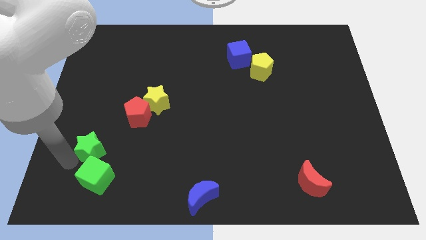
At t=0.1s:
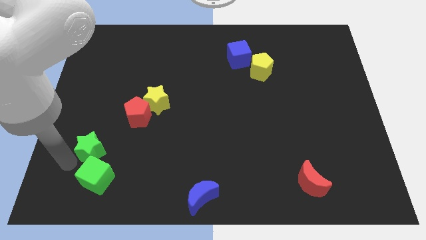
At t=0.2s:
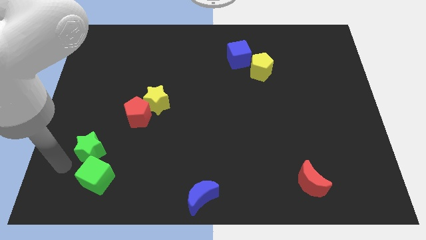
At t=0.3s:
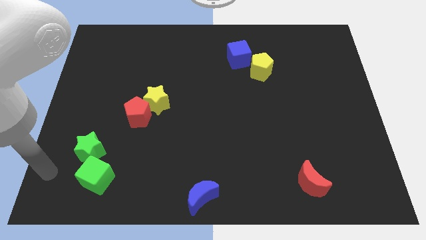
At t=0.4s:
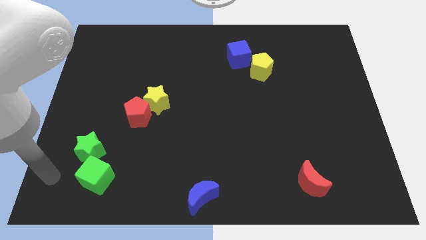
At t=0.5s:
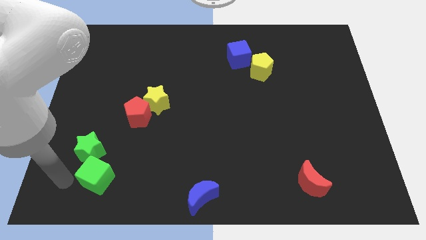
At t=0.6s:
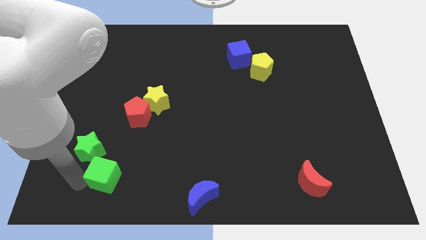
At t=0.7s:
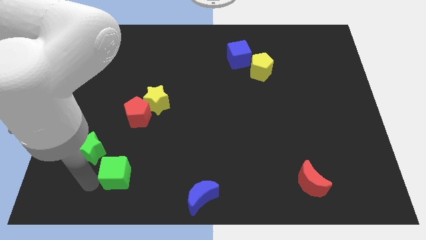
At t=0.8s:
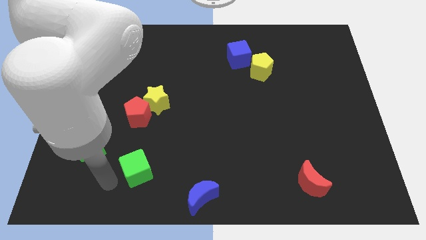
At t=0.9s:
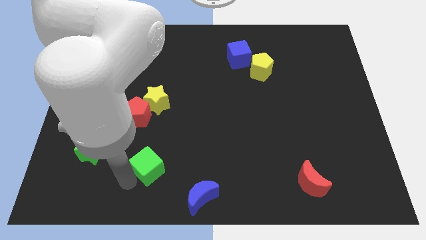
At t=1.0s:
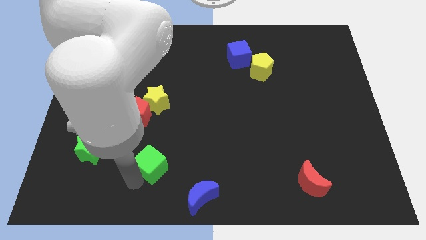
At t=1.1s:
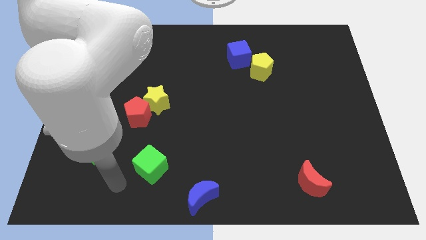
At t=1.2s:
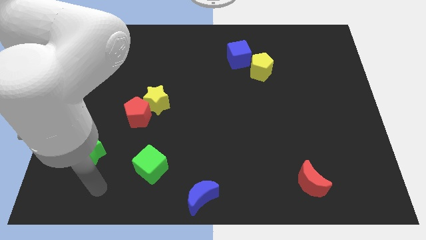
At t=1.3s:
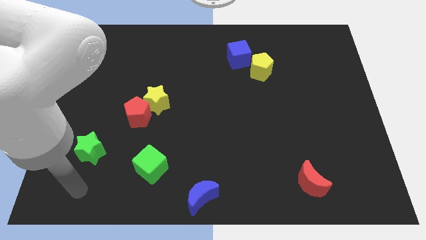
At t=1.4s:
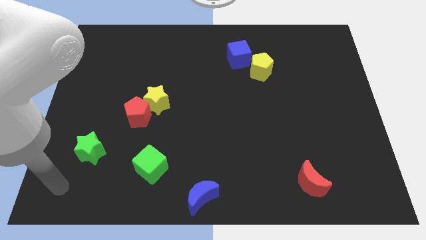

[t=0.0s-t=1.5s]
push green cube apart from green star

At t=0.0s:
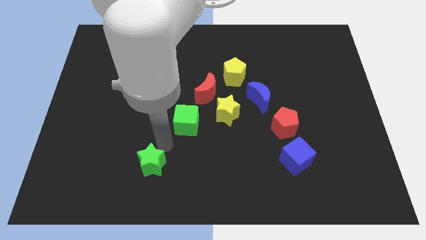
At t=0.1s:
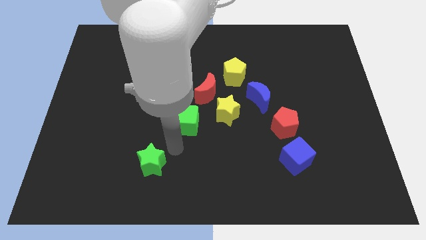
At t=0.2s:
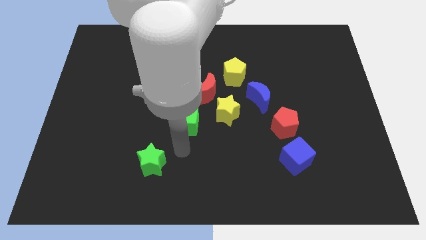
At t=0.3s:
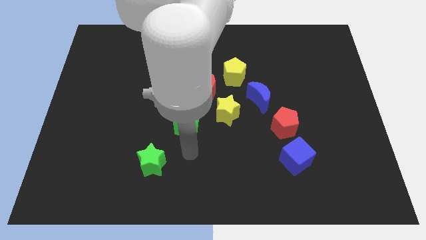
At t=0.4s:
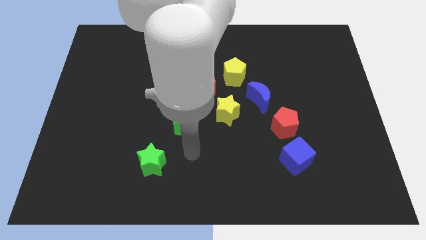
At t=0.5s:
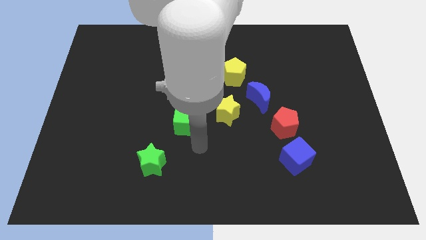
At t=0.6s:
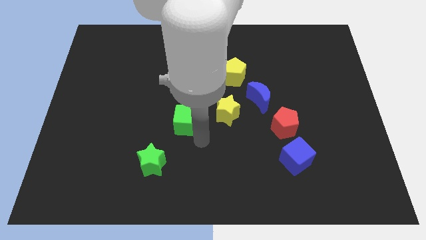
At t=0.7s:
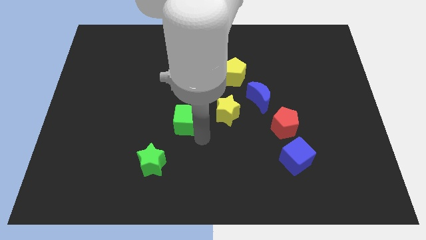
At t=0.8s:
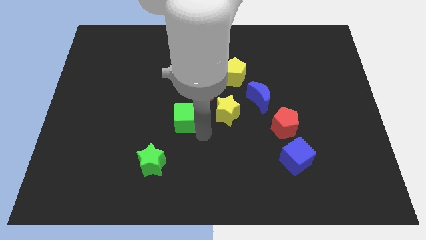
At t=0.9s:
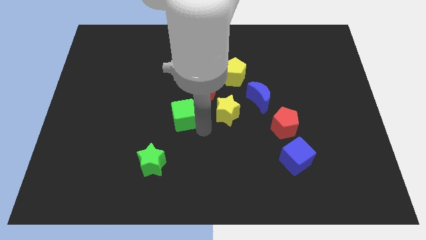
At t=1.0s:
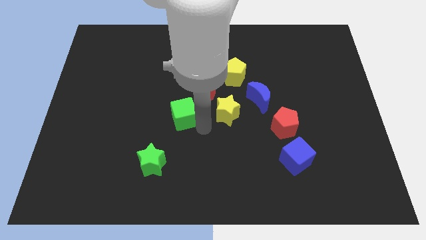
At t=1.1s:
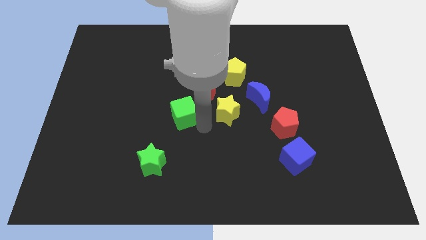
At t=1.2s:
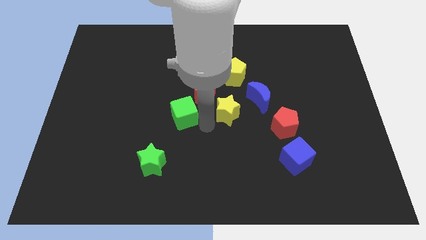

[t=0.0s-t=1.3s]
slightly move the green cube towards the red moon

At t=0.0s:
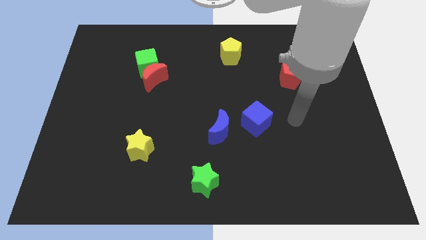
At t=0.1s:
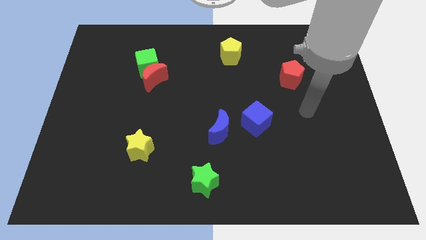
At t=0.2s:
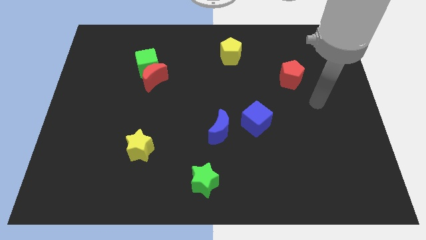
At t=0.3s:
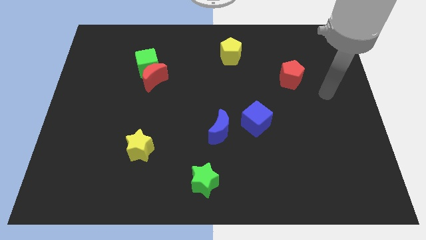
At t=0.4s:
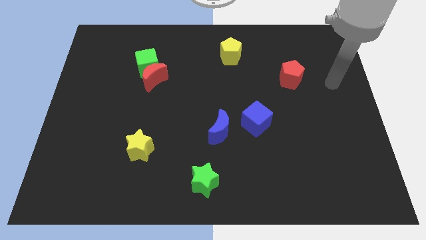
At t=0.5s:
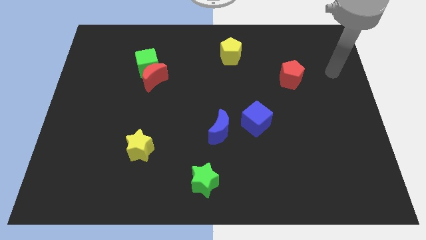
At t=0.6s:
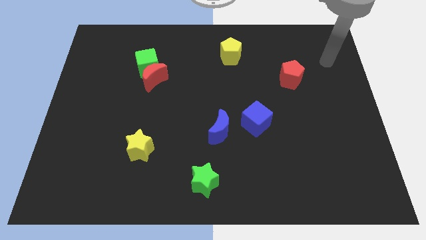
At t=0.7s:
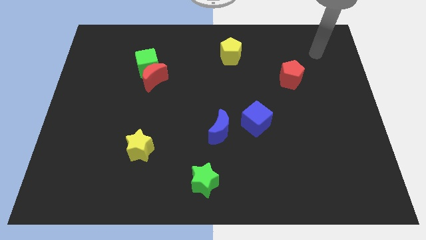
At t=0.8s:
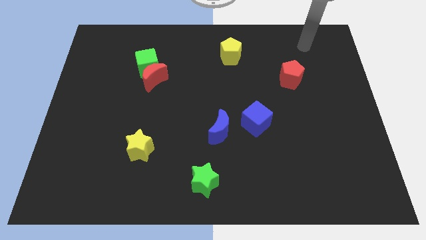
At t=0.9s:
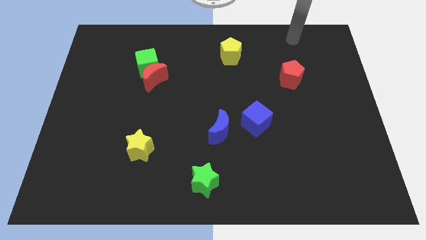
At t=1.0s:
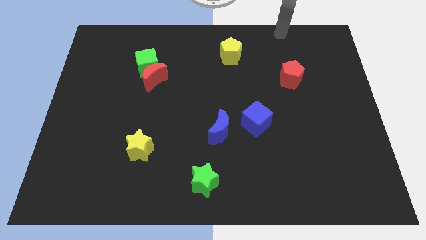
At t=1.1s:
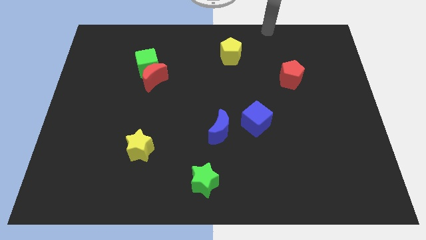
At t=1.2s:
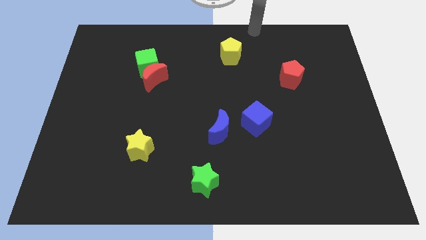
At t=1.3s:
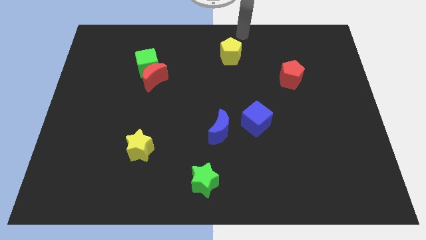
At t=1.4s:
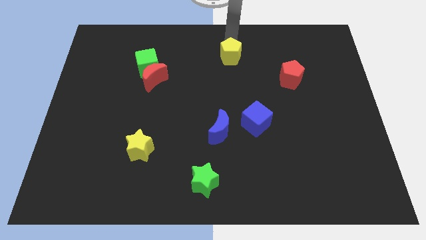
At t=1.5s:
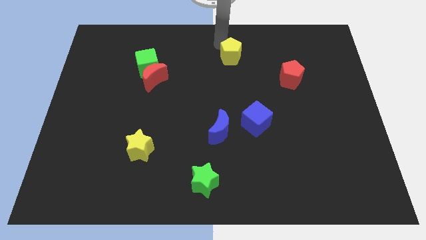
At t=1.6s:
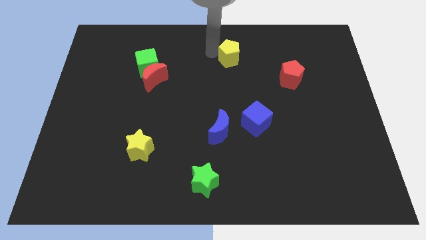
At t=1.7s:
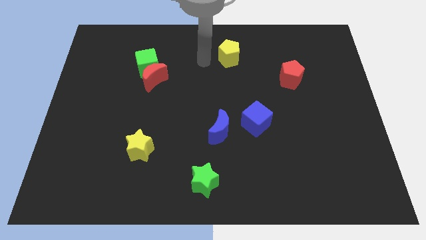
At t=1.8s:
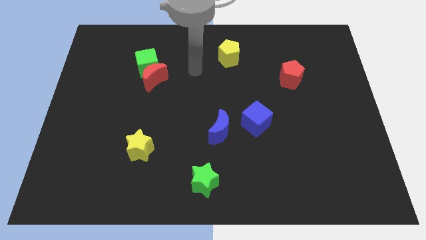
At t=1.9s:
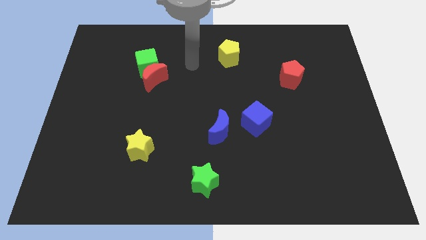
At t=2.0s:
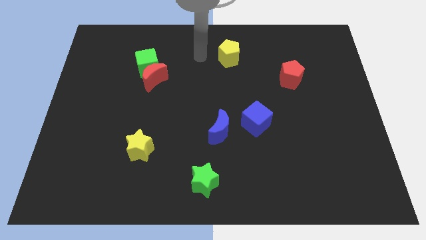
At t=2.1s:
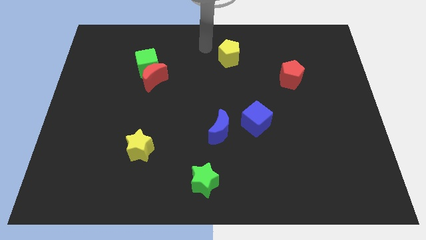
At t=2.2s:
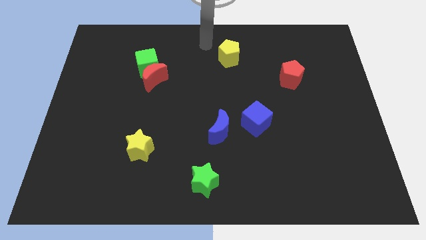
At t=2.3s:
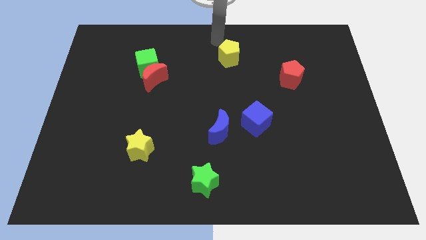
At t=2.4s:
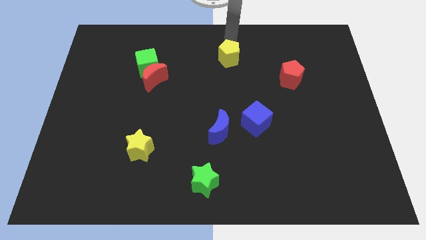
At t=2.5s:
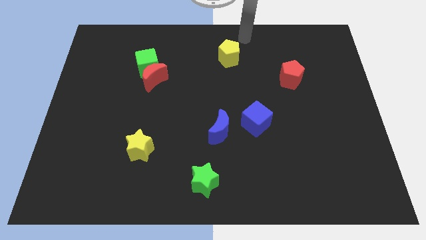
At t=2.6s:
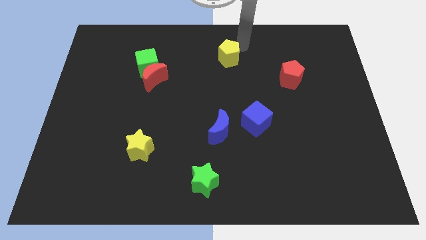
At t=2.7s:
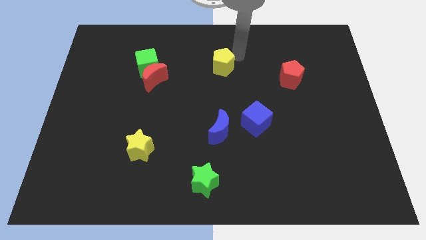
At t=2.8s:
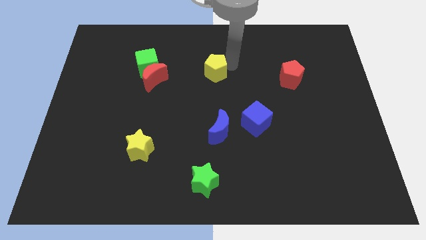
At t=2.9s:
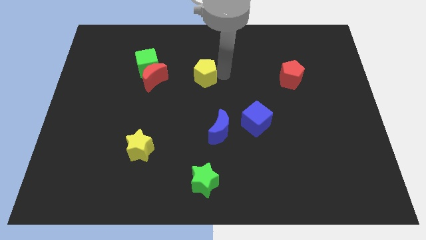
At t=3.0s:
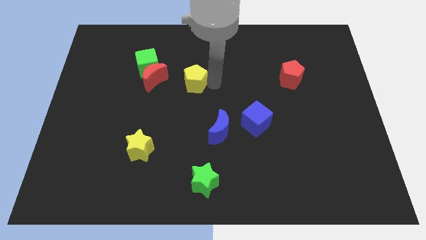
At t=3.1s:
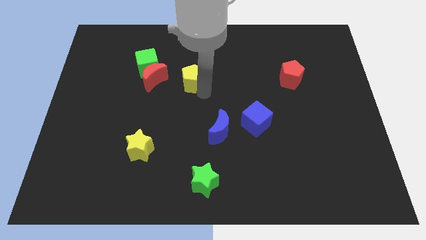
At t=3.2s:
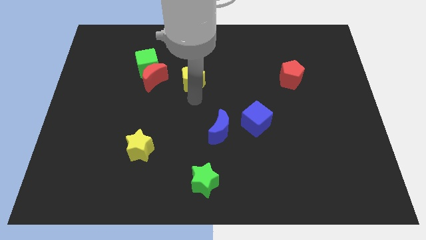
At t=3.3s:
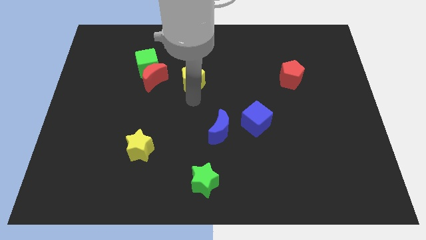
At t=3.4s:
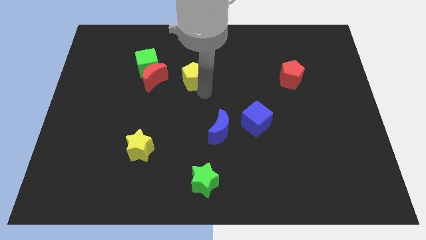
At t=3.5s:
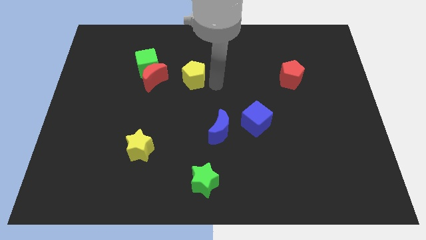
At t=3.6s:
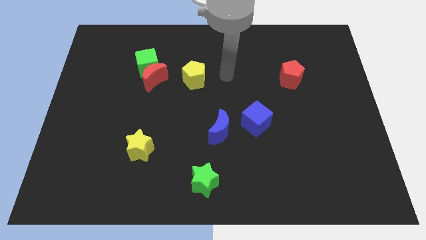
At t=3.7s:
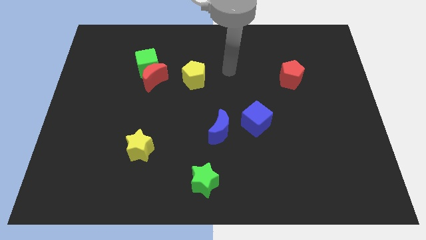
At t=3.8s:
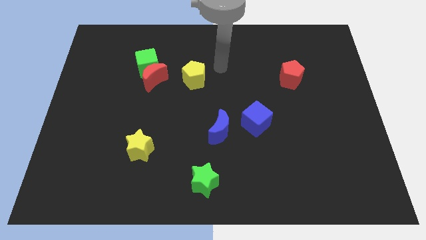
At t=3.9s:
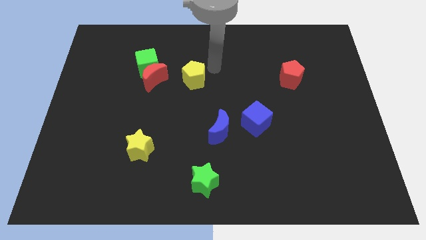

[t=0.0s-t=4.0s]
place yellow pentagon parallel to red moon

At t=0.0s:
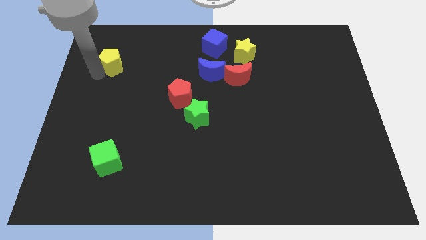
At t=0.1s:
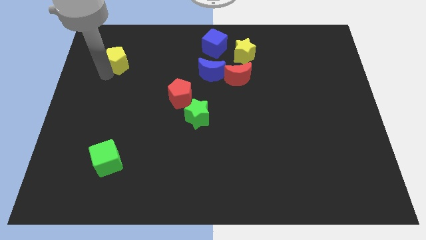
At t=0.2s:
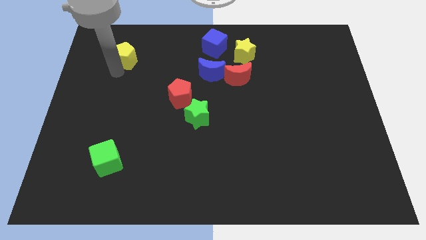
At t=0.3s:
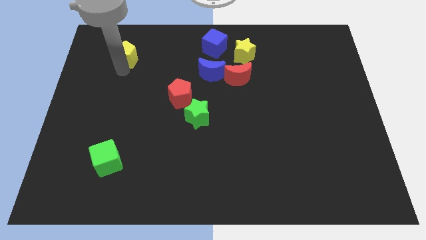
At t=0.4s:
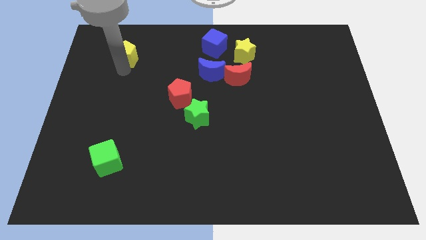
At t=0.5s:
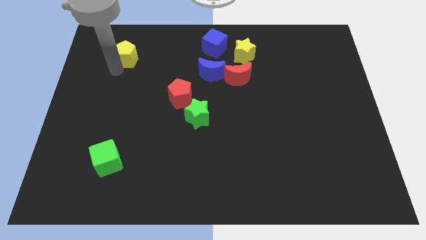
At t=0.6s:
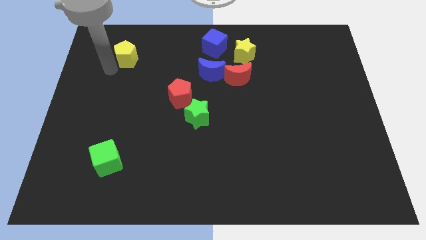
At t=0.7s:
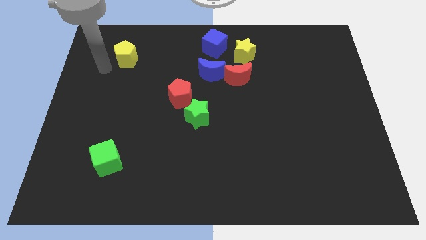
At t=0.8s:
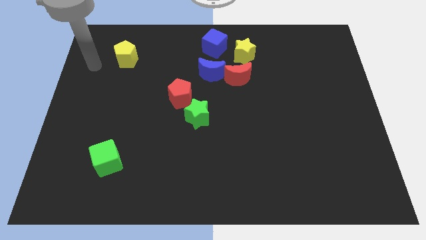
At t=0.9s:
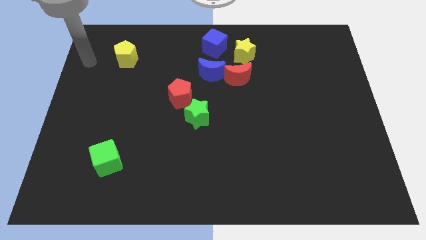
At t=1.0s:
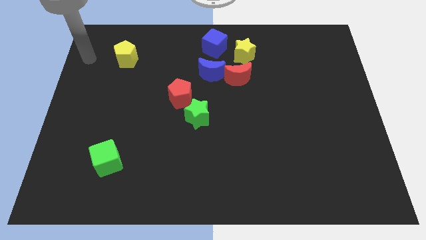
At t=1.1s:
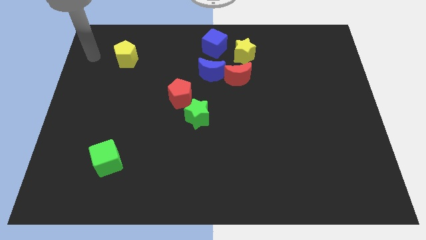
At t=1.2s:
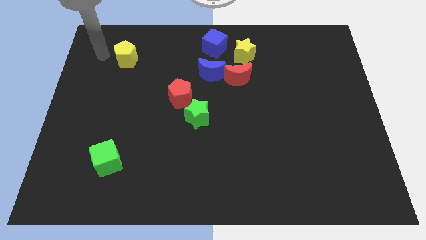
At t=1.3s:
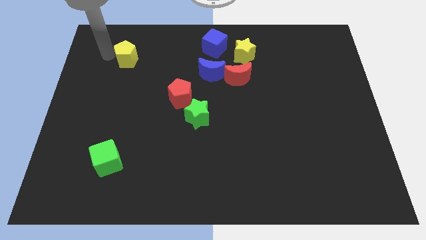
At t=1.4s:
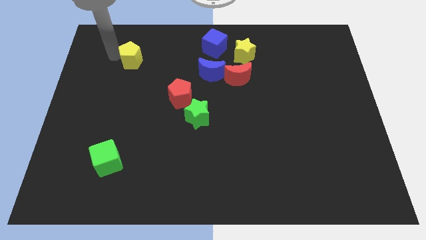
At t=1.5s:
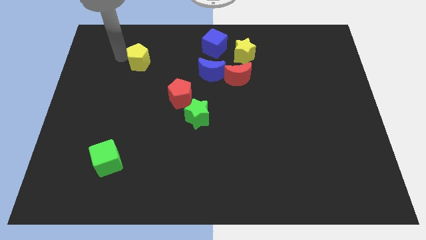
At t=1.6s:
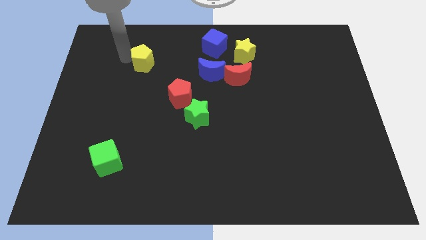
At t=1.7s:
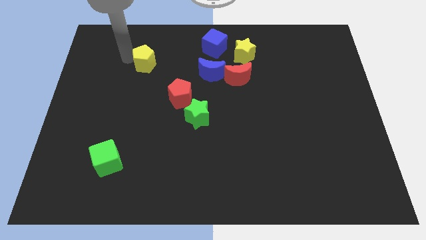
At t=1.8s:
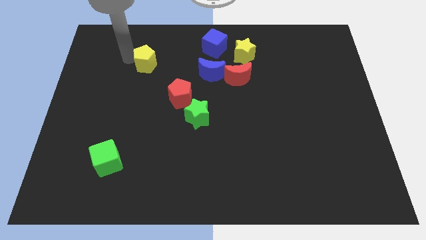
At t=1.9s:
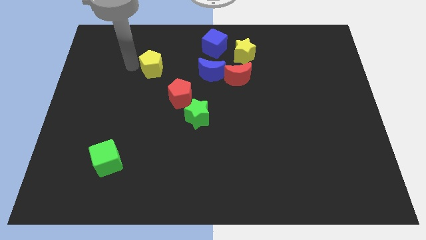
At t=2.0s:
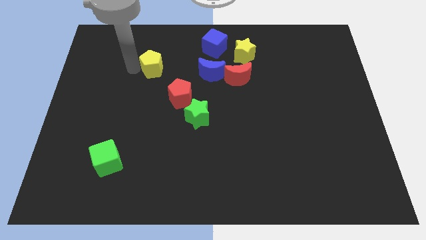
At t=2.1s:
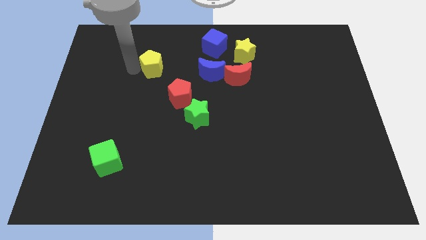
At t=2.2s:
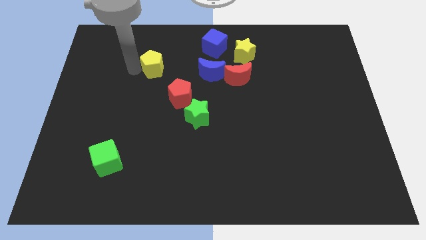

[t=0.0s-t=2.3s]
push the yellow pentagon to the right
